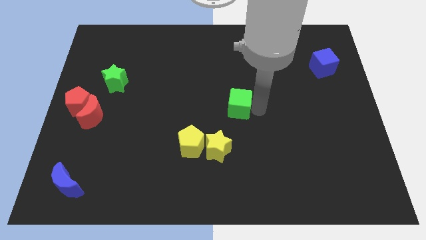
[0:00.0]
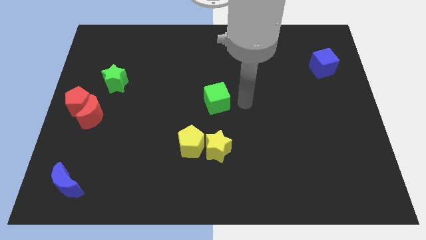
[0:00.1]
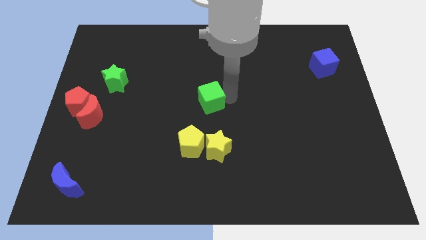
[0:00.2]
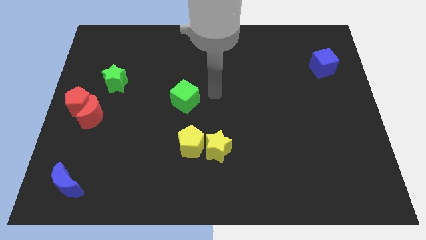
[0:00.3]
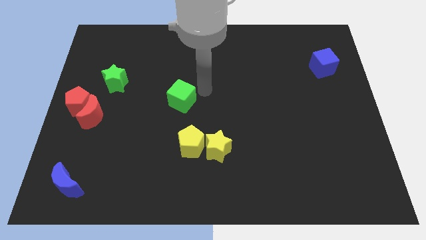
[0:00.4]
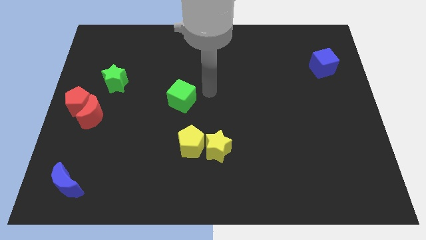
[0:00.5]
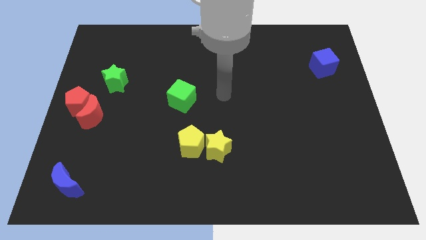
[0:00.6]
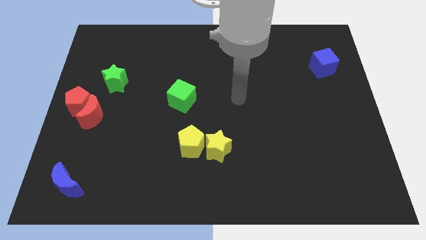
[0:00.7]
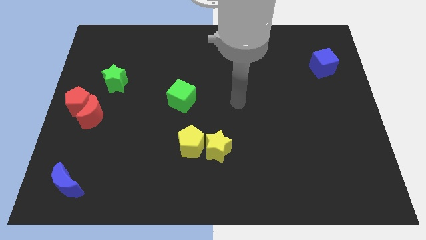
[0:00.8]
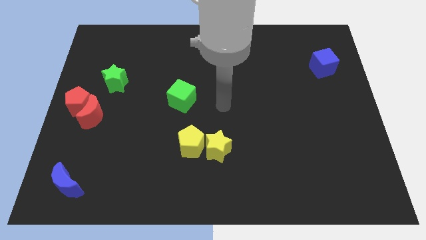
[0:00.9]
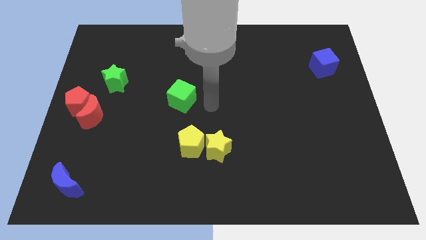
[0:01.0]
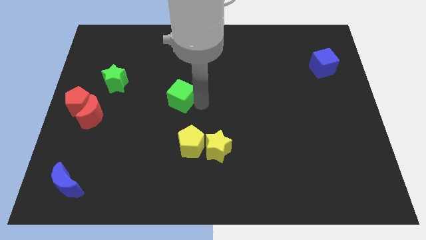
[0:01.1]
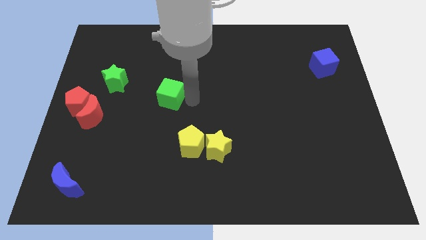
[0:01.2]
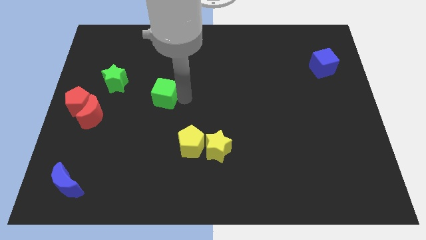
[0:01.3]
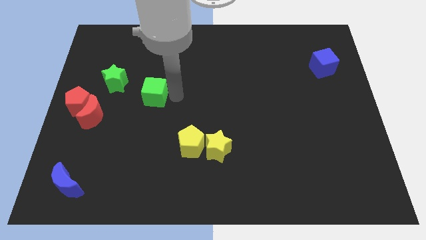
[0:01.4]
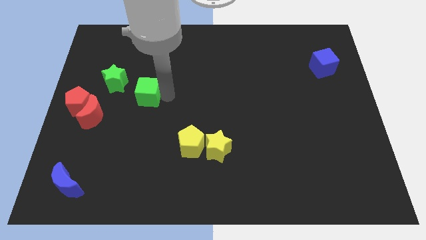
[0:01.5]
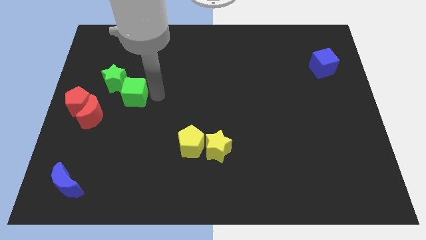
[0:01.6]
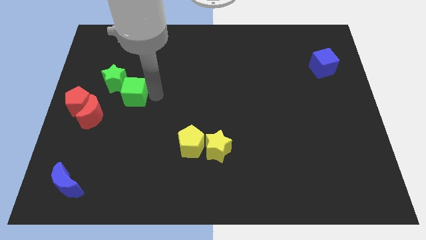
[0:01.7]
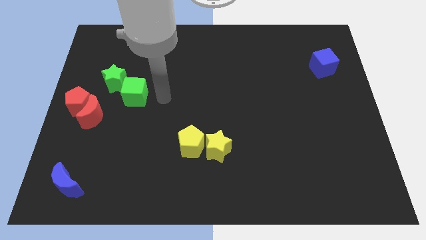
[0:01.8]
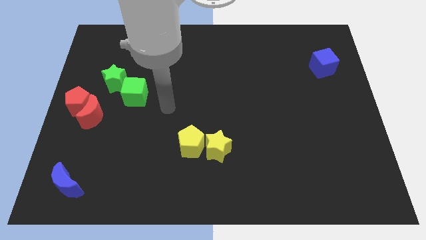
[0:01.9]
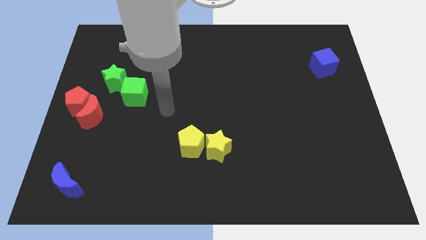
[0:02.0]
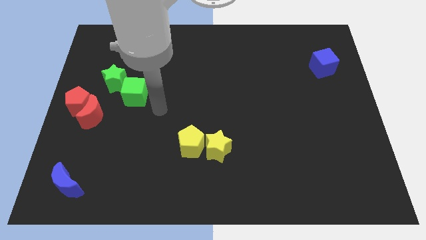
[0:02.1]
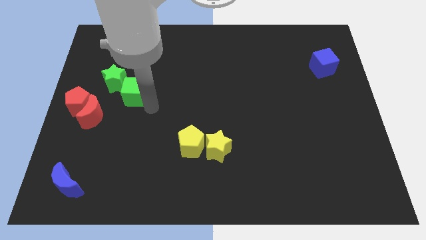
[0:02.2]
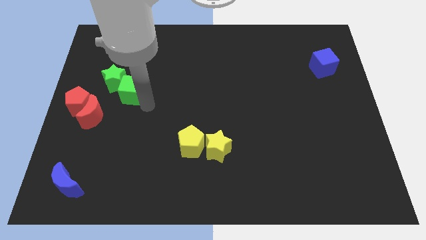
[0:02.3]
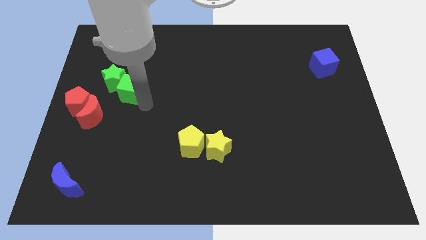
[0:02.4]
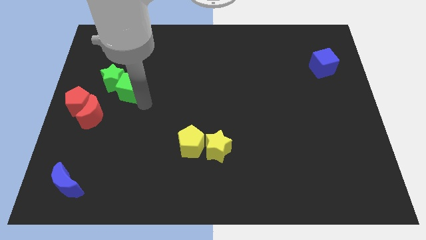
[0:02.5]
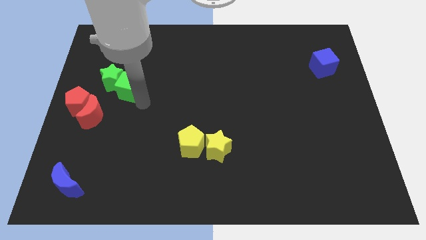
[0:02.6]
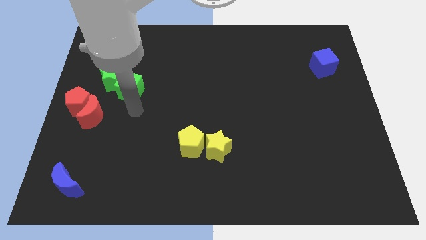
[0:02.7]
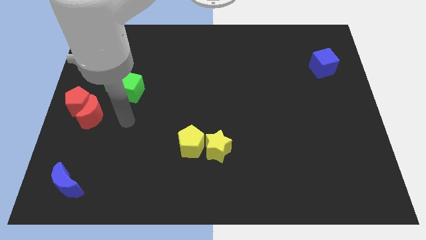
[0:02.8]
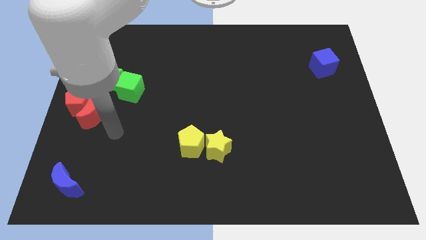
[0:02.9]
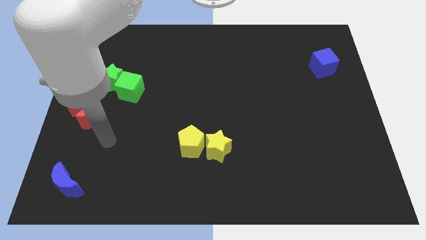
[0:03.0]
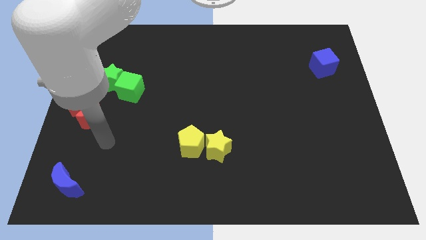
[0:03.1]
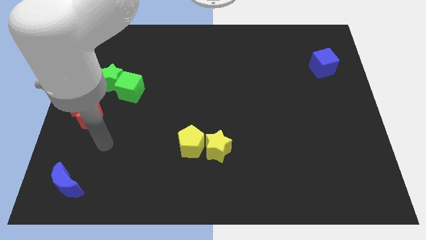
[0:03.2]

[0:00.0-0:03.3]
push the green cube towards the left side of the board

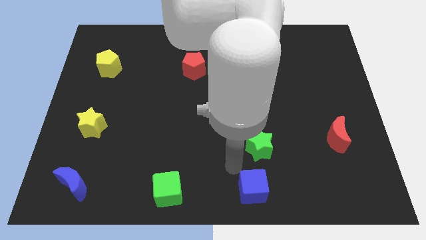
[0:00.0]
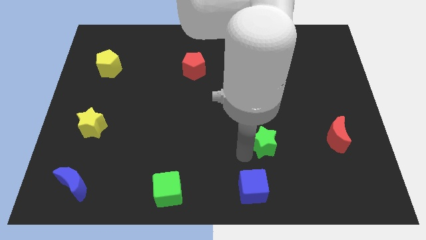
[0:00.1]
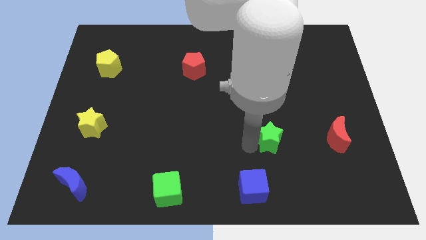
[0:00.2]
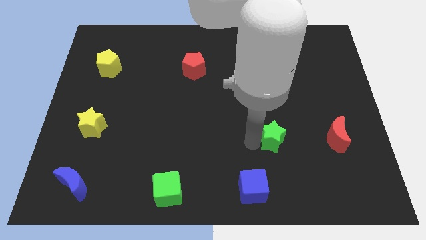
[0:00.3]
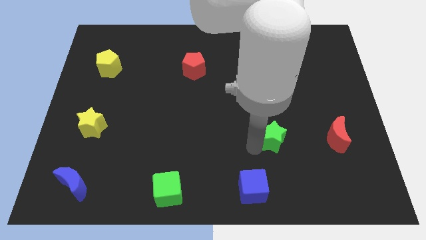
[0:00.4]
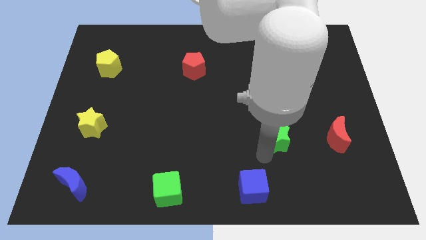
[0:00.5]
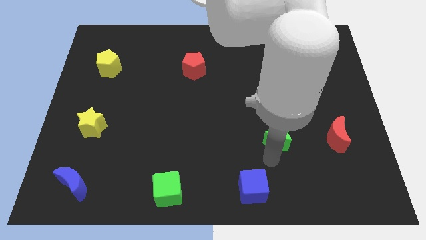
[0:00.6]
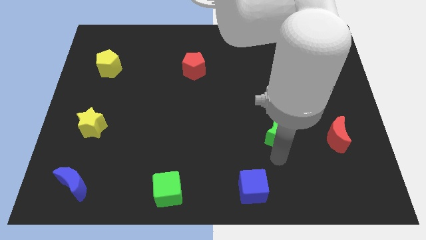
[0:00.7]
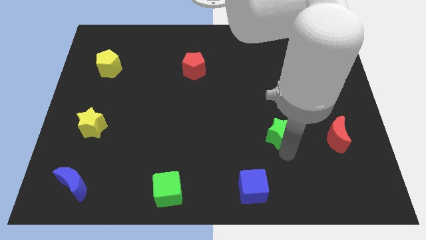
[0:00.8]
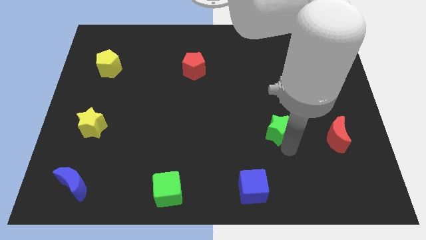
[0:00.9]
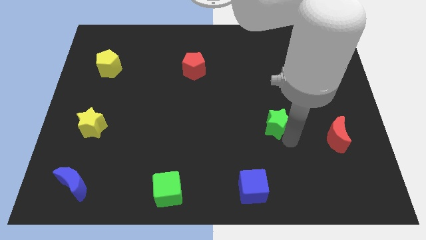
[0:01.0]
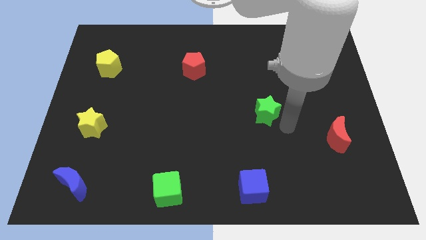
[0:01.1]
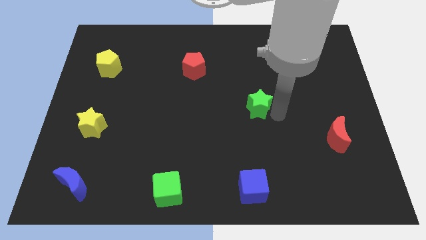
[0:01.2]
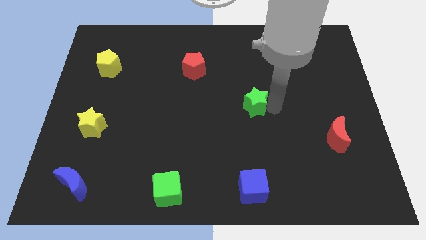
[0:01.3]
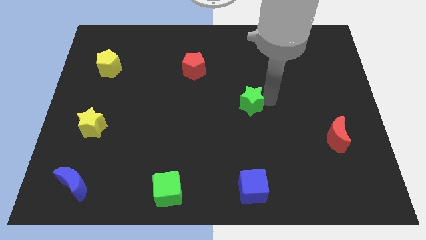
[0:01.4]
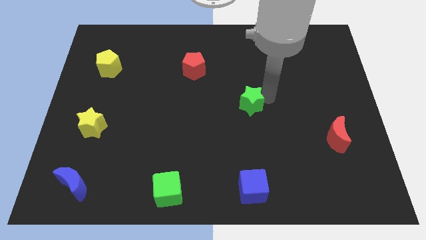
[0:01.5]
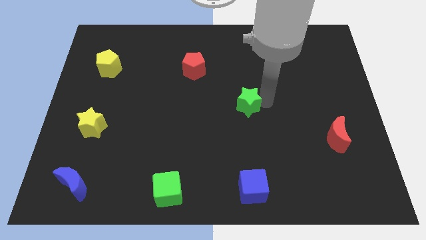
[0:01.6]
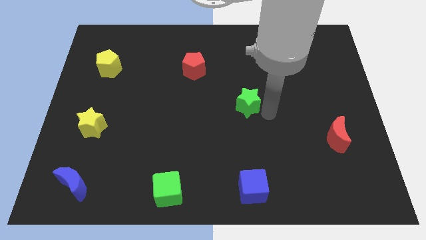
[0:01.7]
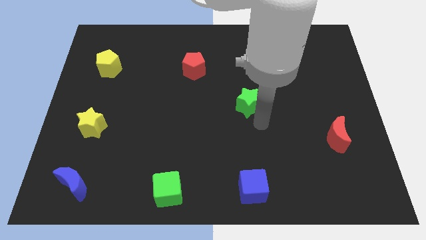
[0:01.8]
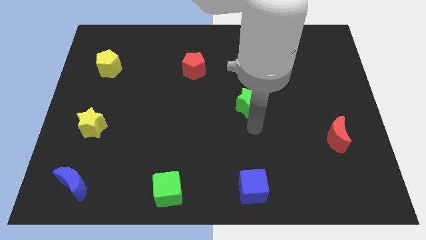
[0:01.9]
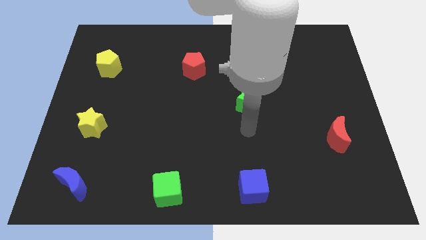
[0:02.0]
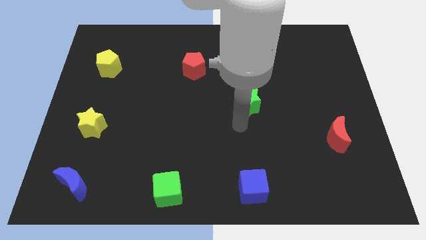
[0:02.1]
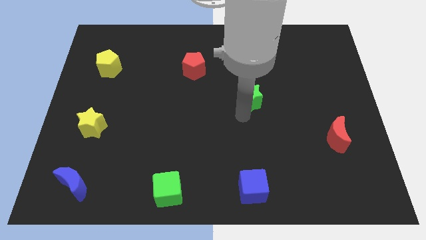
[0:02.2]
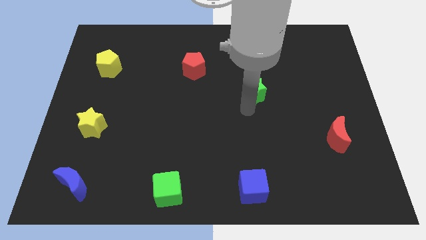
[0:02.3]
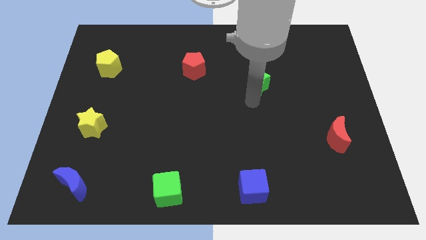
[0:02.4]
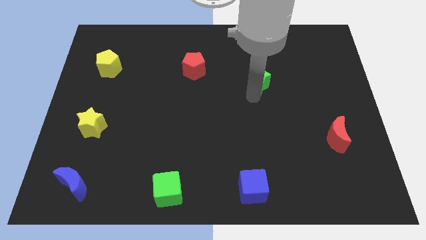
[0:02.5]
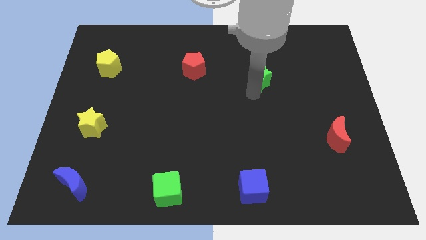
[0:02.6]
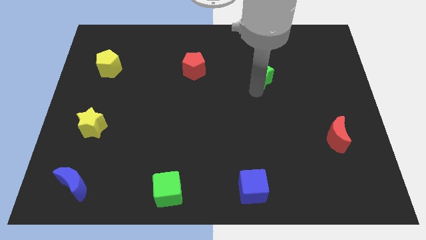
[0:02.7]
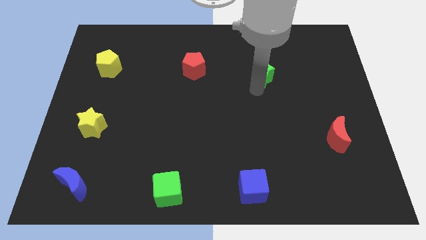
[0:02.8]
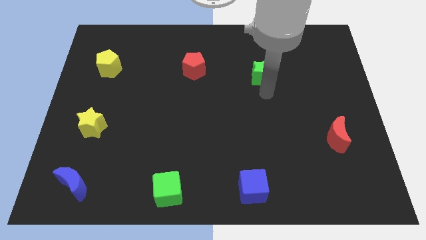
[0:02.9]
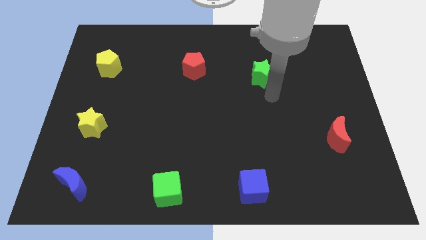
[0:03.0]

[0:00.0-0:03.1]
push green star upwards to the right of red pentagon

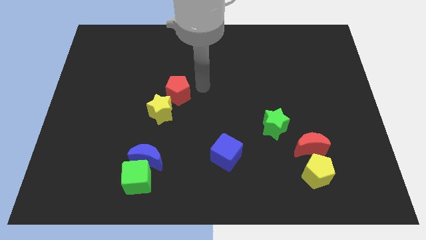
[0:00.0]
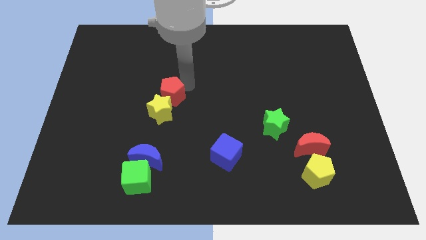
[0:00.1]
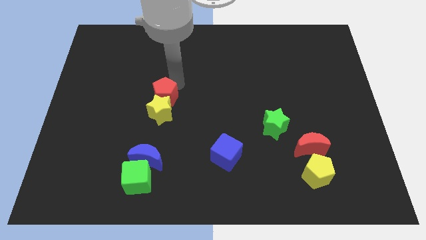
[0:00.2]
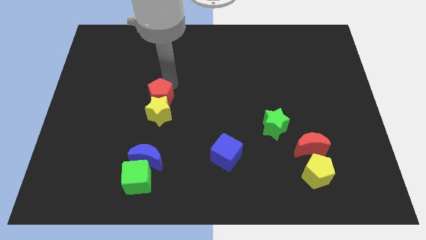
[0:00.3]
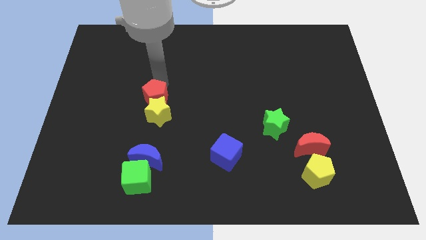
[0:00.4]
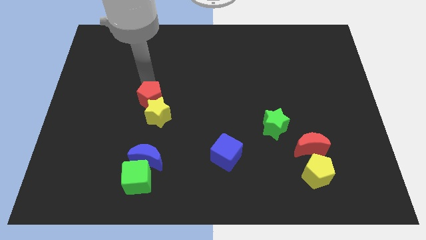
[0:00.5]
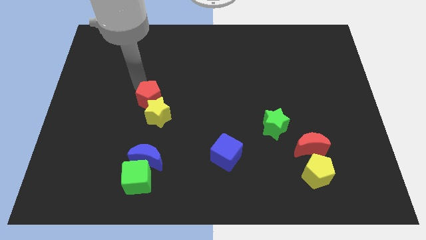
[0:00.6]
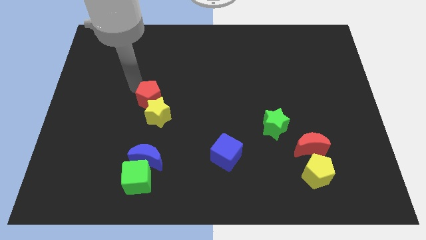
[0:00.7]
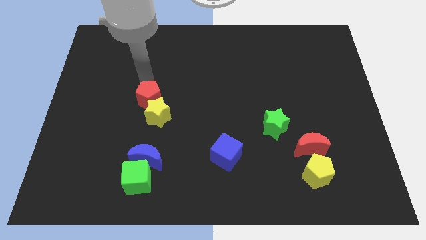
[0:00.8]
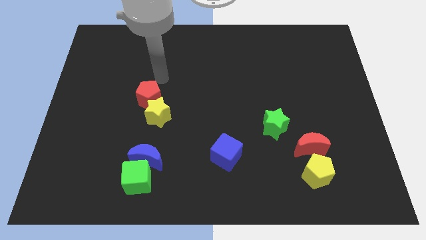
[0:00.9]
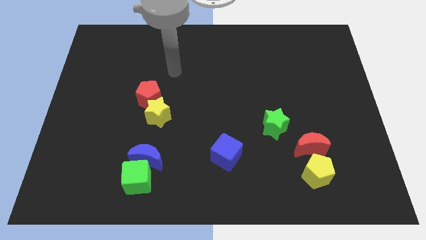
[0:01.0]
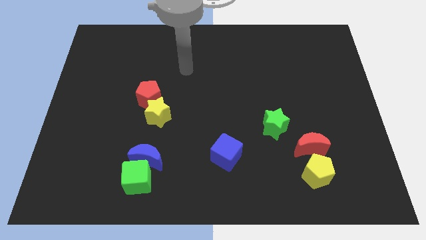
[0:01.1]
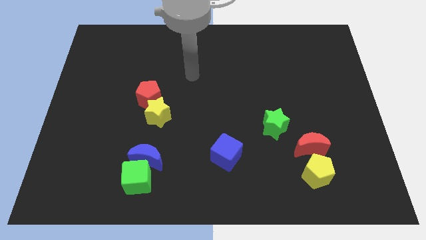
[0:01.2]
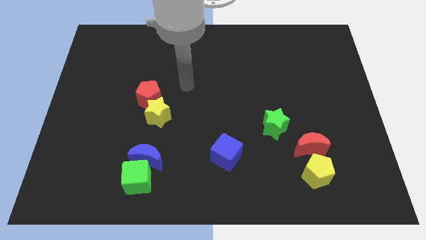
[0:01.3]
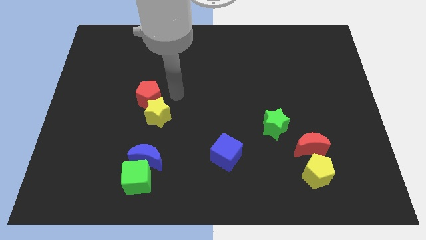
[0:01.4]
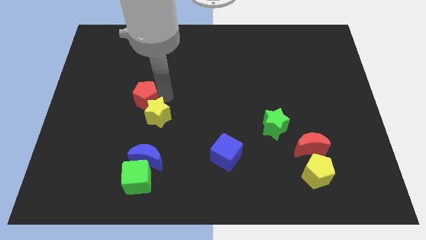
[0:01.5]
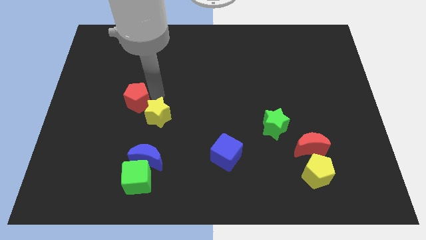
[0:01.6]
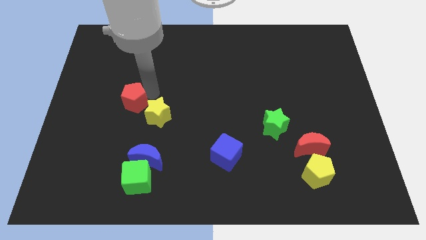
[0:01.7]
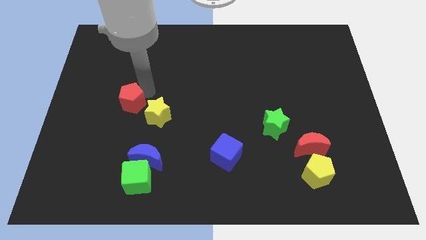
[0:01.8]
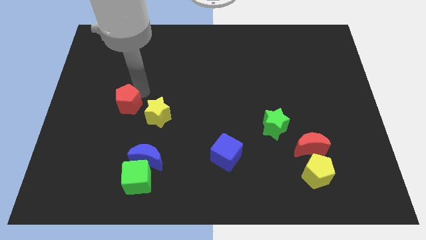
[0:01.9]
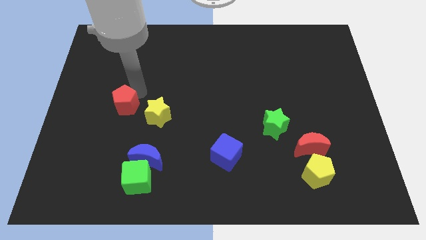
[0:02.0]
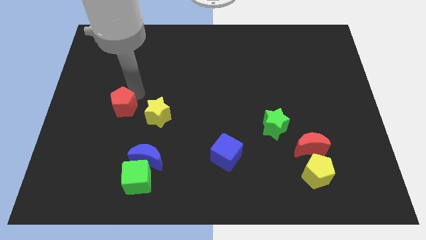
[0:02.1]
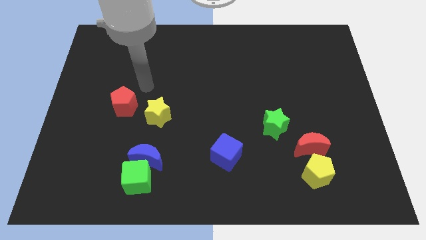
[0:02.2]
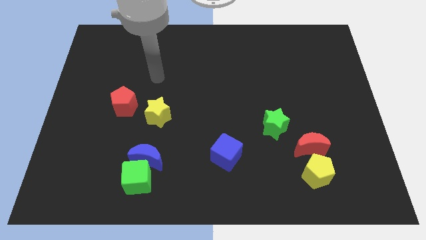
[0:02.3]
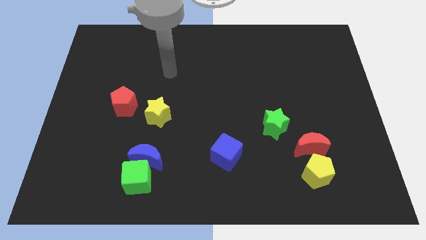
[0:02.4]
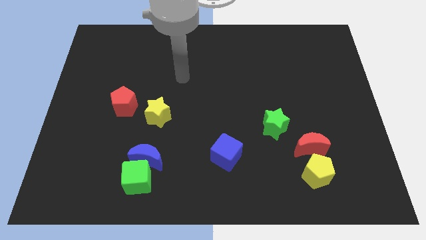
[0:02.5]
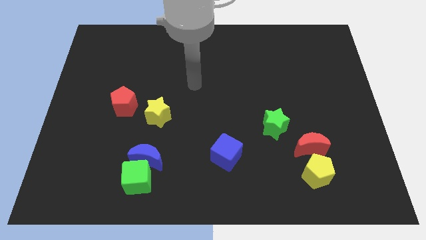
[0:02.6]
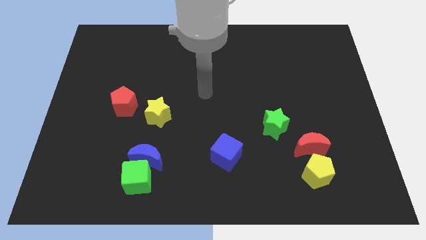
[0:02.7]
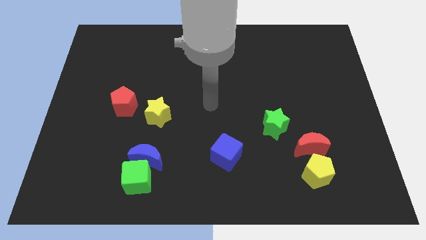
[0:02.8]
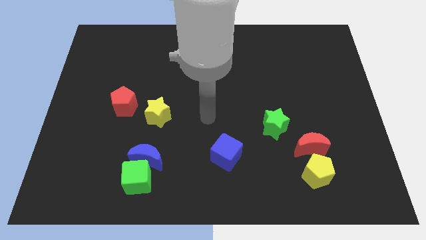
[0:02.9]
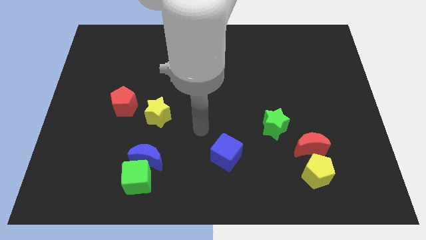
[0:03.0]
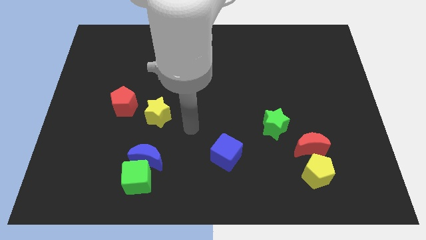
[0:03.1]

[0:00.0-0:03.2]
move red pentagon to the left of yellow star
